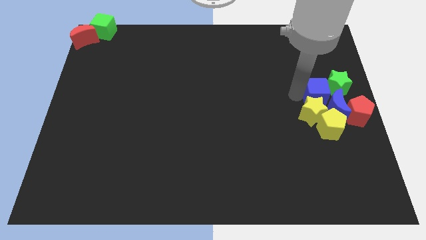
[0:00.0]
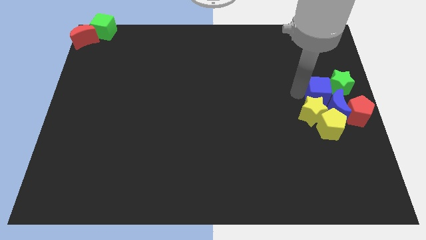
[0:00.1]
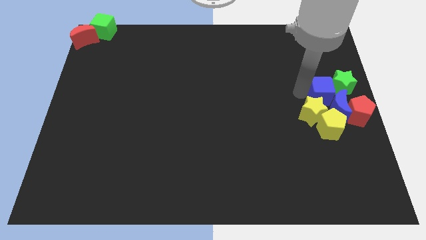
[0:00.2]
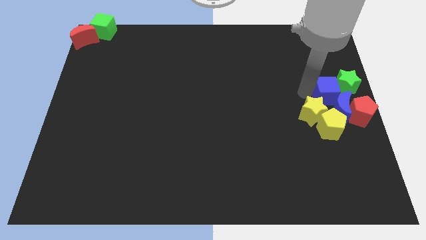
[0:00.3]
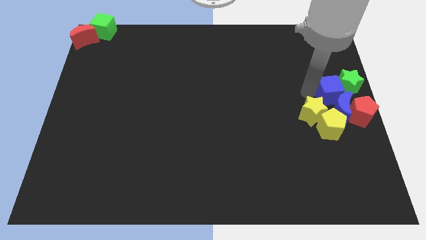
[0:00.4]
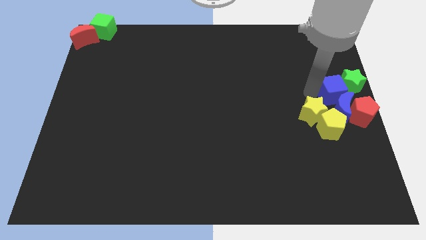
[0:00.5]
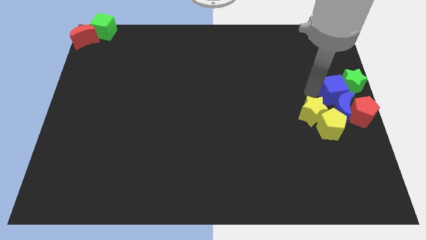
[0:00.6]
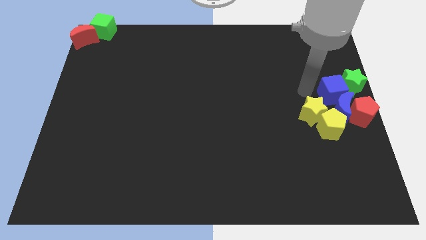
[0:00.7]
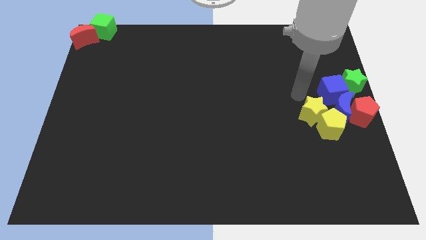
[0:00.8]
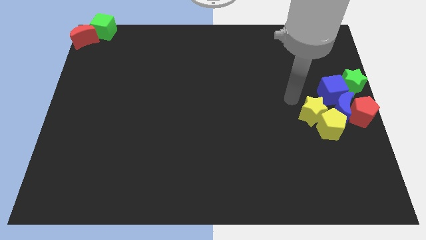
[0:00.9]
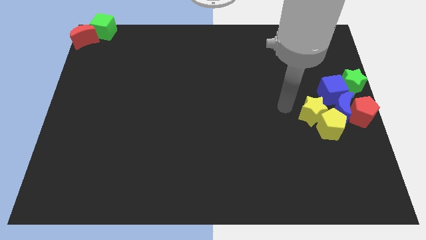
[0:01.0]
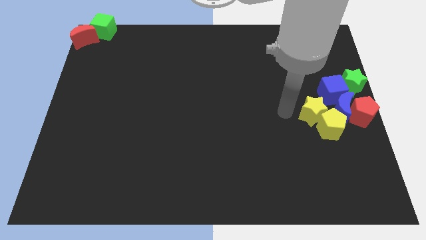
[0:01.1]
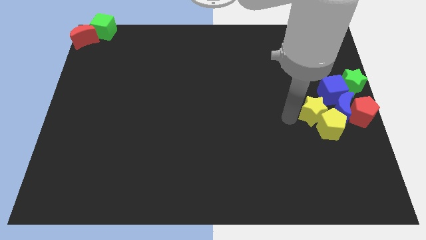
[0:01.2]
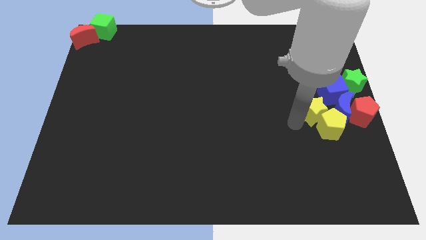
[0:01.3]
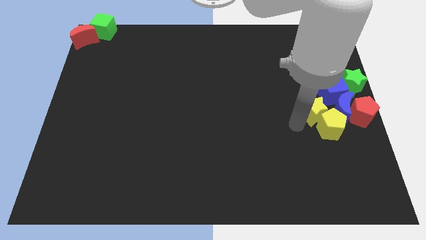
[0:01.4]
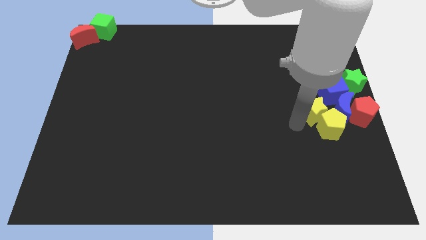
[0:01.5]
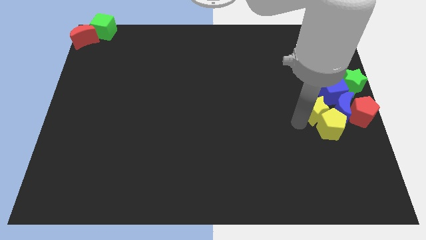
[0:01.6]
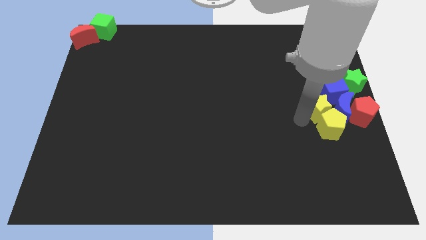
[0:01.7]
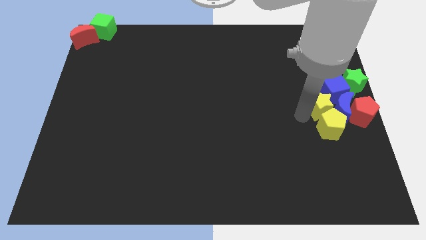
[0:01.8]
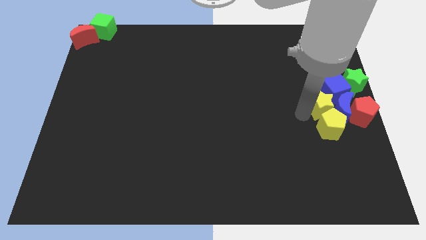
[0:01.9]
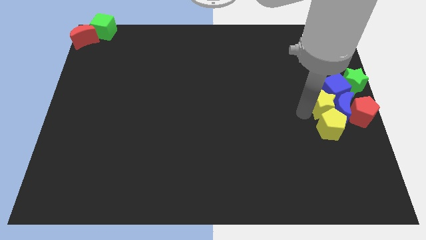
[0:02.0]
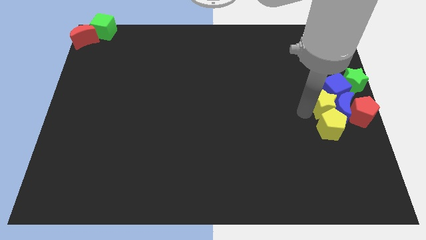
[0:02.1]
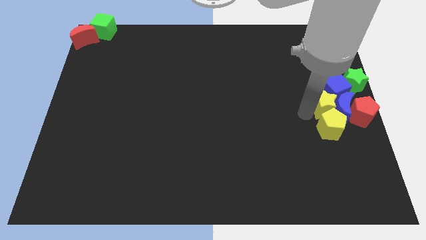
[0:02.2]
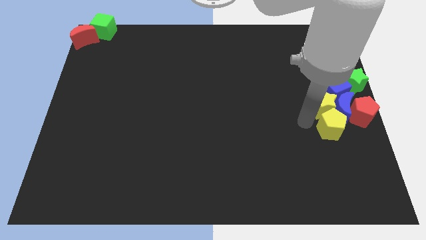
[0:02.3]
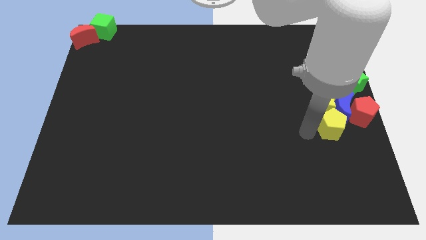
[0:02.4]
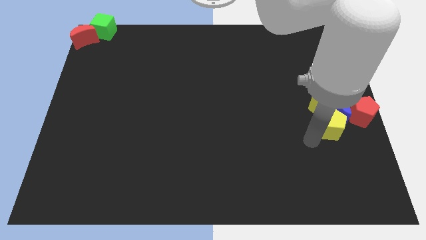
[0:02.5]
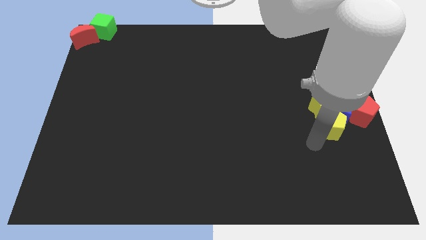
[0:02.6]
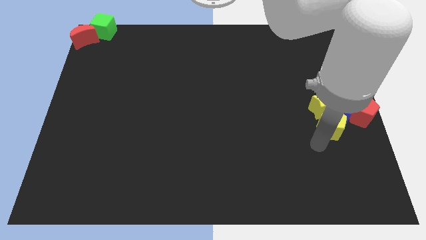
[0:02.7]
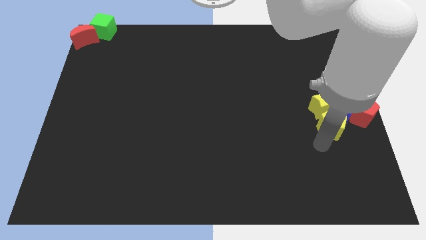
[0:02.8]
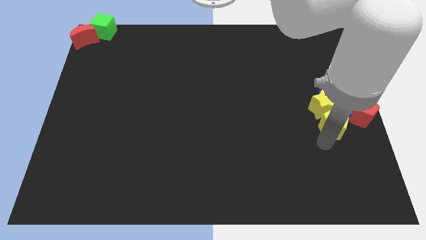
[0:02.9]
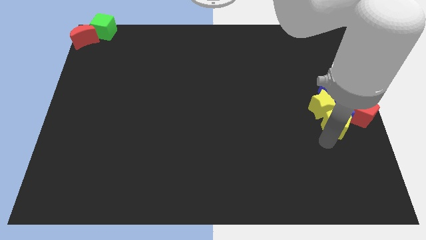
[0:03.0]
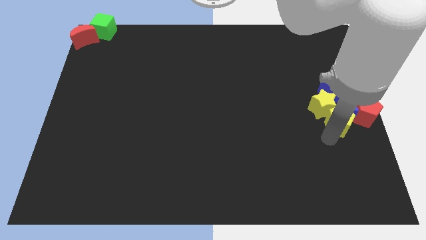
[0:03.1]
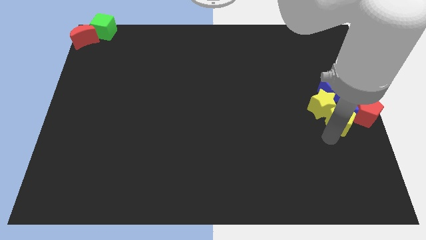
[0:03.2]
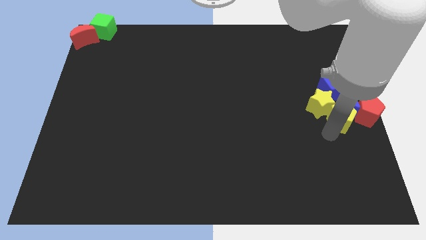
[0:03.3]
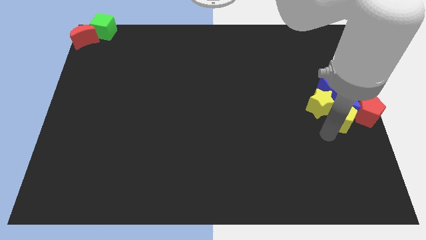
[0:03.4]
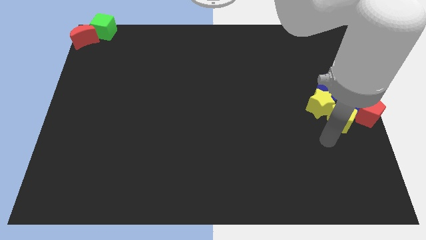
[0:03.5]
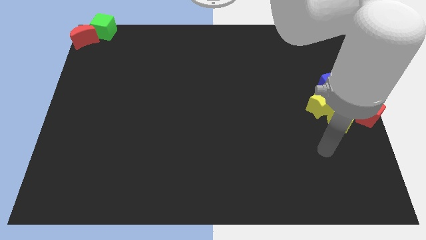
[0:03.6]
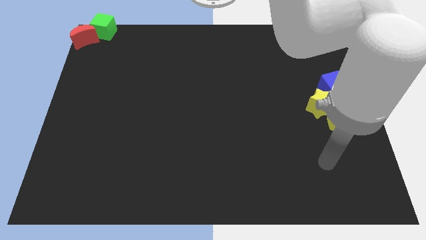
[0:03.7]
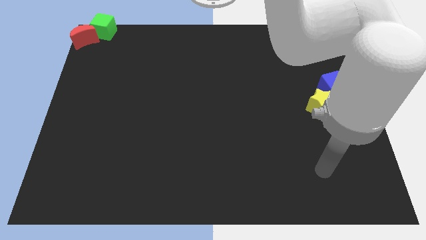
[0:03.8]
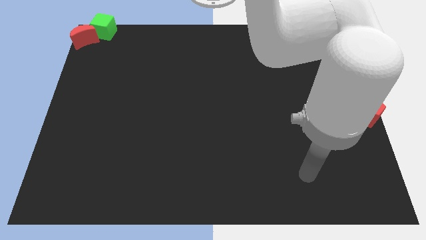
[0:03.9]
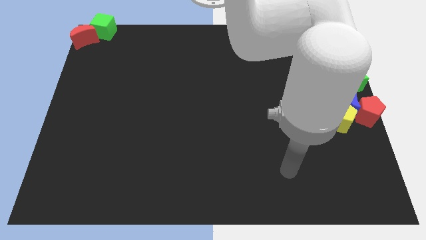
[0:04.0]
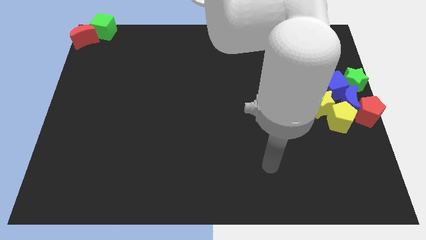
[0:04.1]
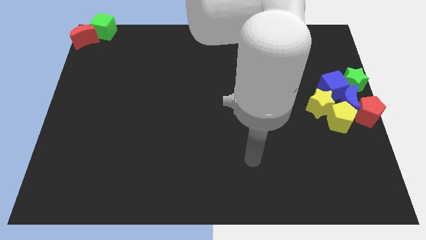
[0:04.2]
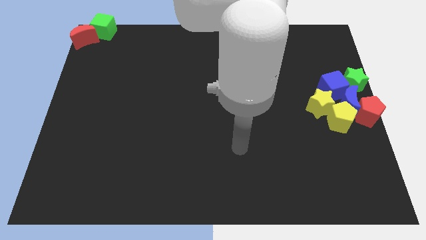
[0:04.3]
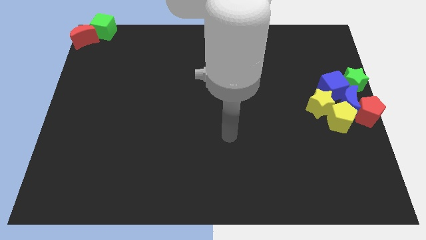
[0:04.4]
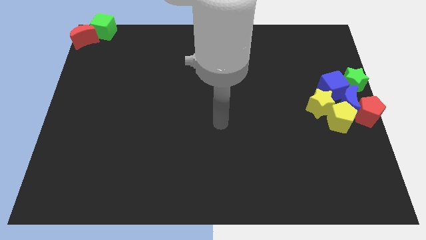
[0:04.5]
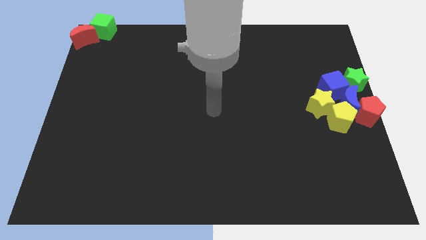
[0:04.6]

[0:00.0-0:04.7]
push the group of blocks to the right of the board

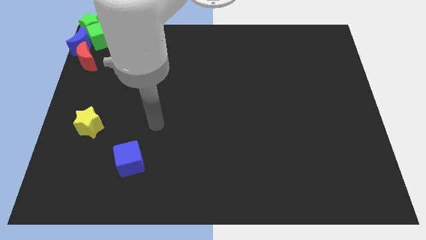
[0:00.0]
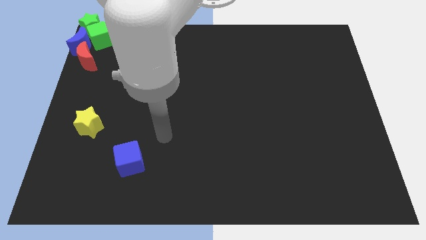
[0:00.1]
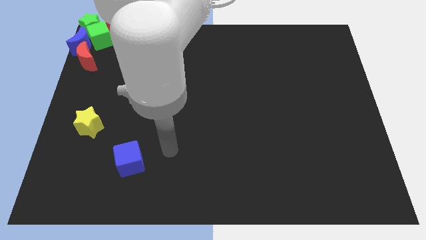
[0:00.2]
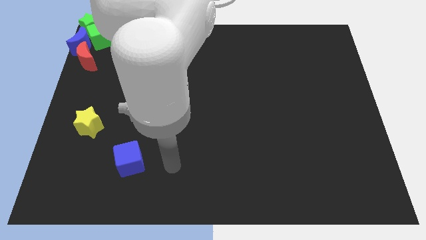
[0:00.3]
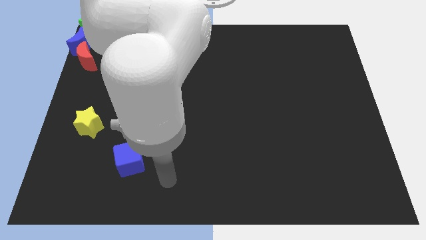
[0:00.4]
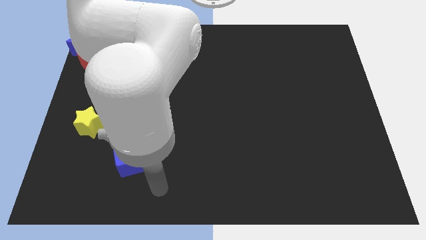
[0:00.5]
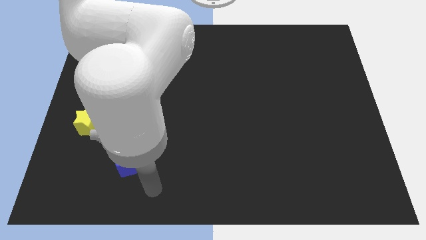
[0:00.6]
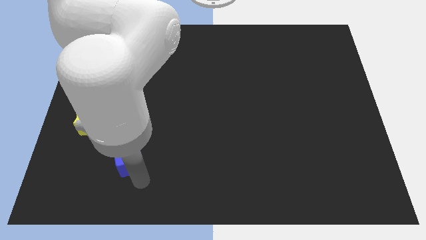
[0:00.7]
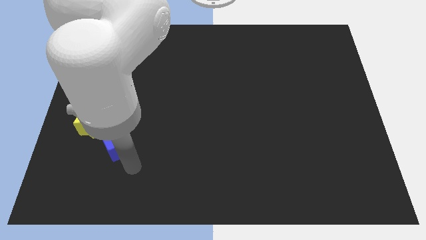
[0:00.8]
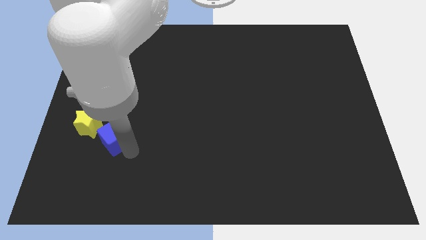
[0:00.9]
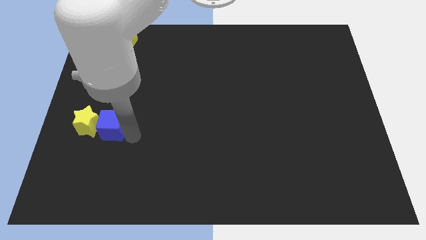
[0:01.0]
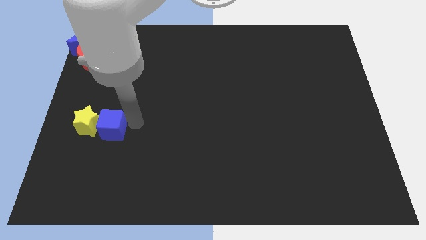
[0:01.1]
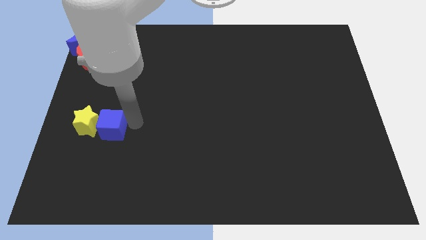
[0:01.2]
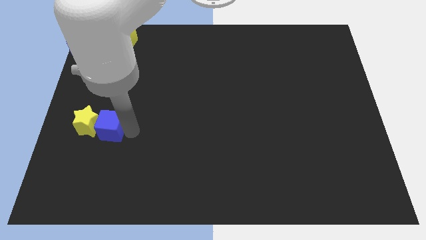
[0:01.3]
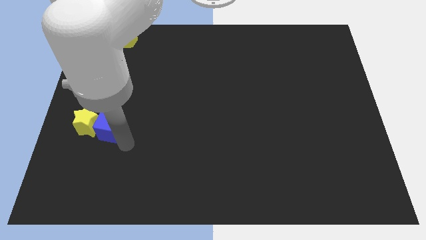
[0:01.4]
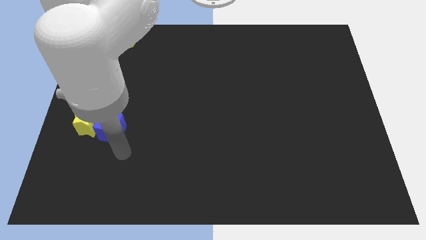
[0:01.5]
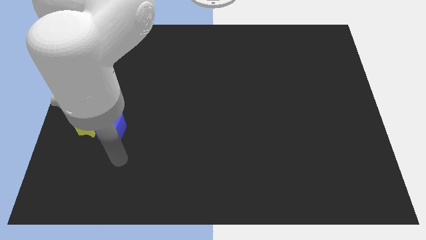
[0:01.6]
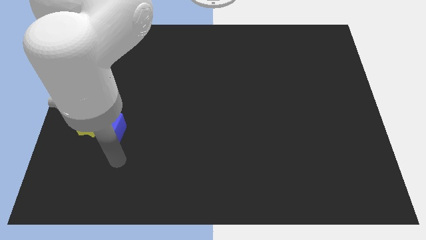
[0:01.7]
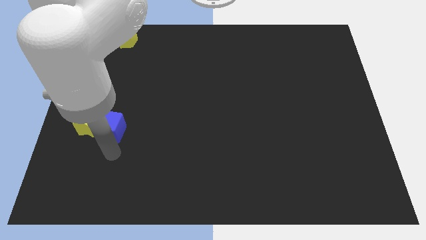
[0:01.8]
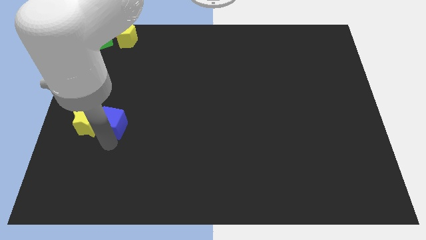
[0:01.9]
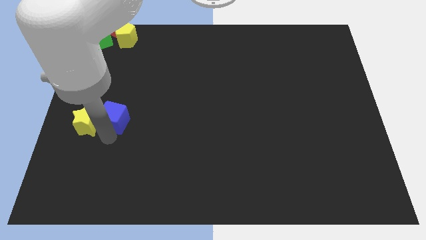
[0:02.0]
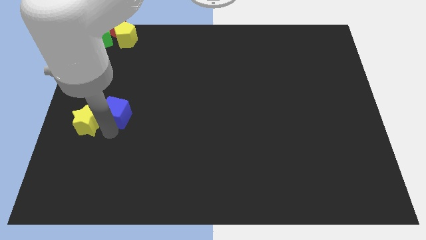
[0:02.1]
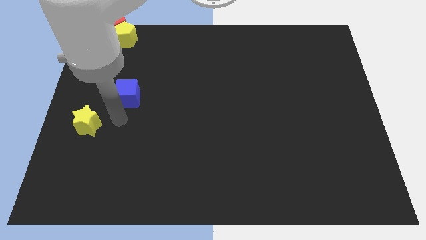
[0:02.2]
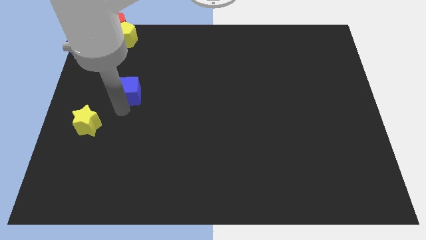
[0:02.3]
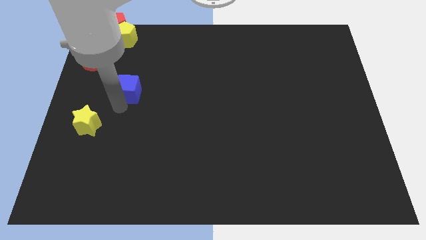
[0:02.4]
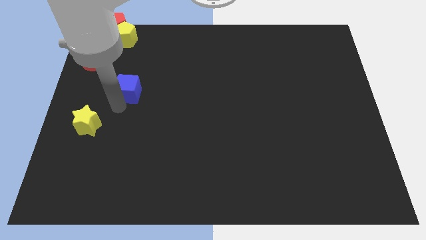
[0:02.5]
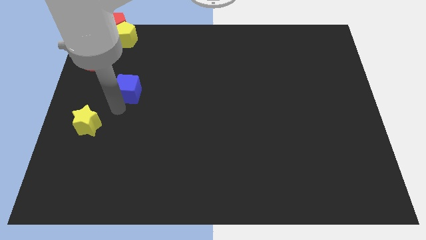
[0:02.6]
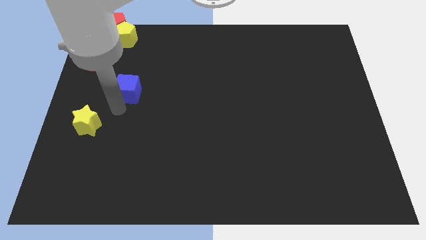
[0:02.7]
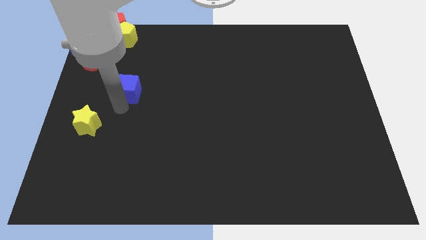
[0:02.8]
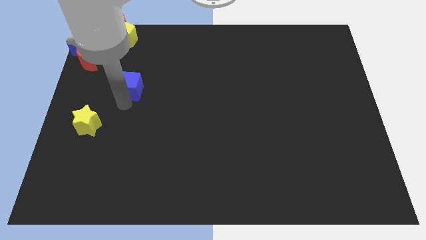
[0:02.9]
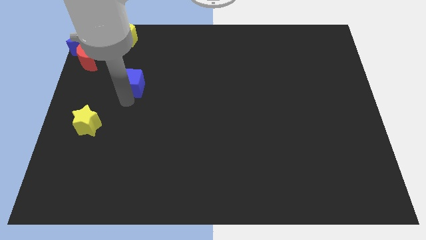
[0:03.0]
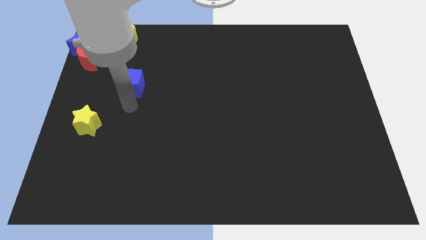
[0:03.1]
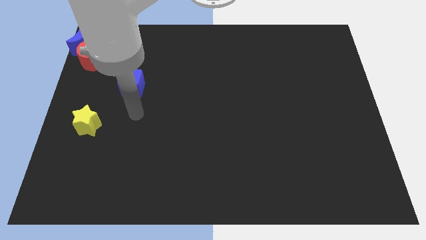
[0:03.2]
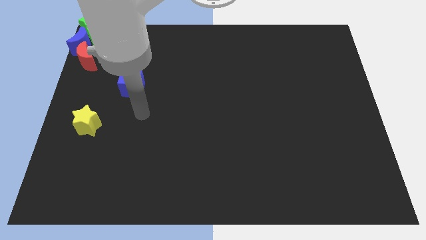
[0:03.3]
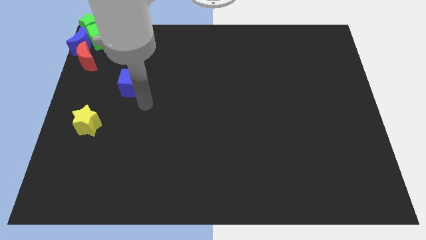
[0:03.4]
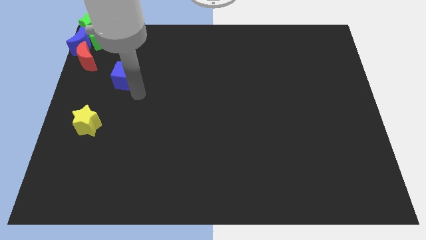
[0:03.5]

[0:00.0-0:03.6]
move the blue cube diagonally top right to the yellow star

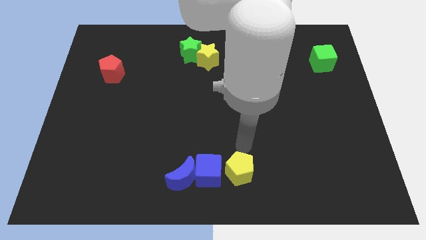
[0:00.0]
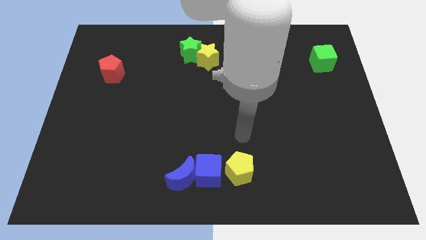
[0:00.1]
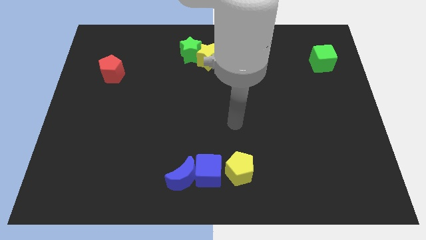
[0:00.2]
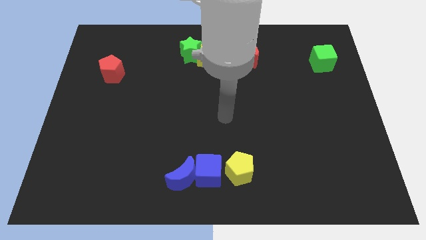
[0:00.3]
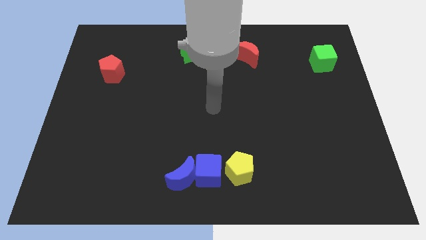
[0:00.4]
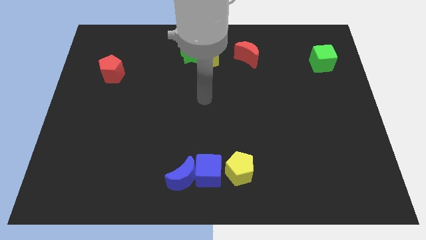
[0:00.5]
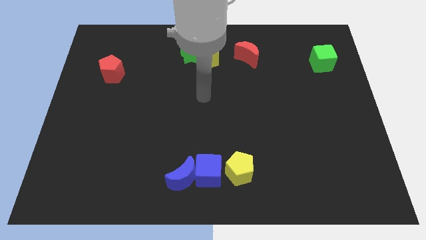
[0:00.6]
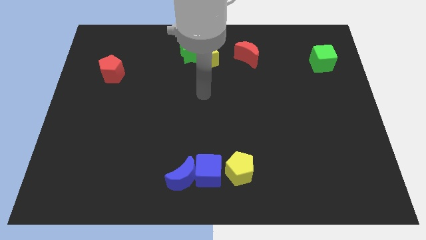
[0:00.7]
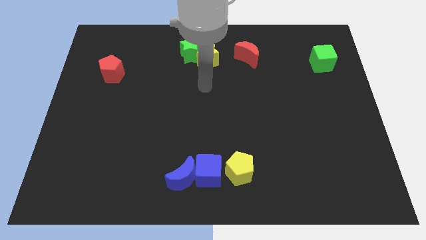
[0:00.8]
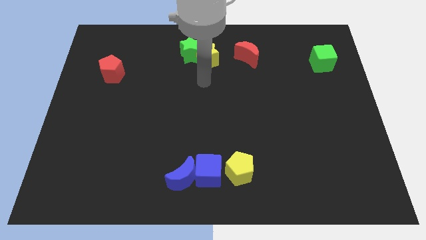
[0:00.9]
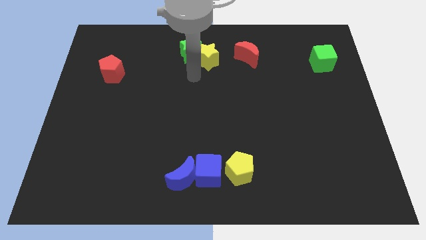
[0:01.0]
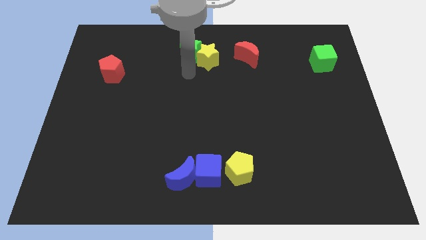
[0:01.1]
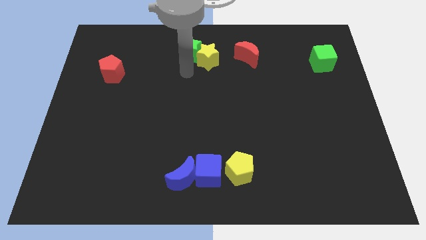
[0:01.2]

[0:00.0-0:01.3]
move your arm towards the top side of the board
